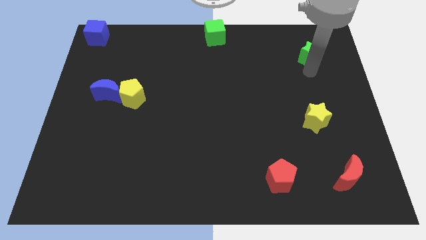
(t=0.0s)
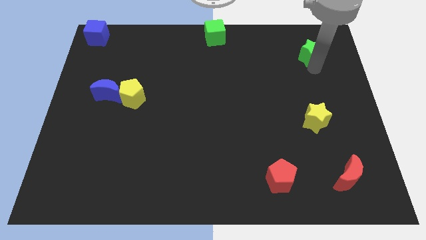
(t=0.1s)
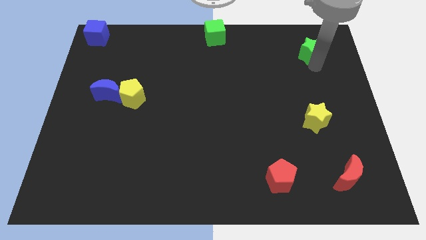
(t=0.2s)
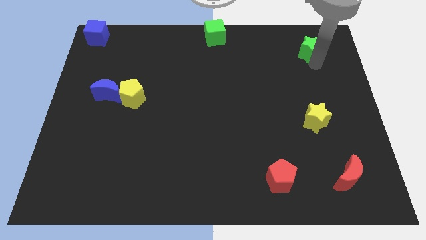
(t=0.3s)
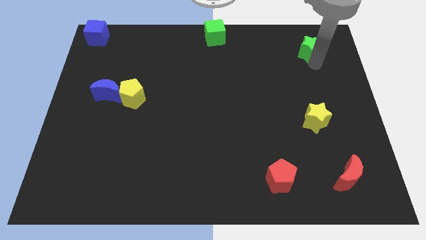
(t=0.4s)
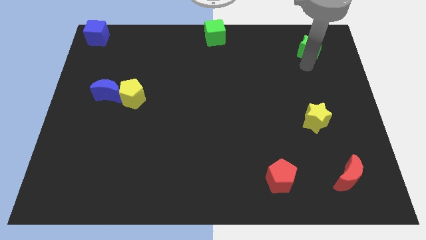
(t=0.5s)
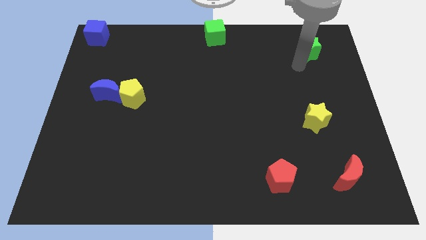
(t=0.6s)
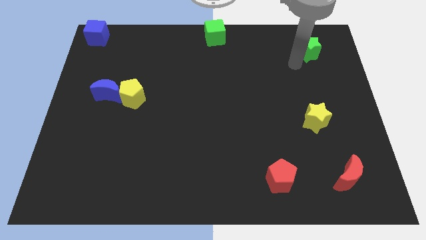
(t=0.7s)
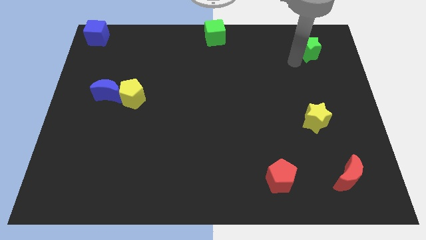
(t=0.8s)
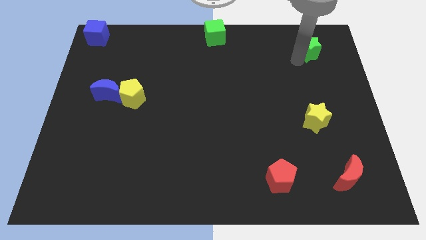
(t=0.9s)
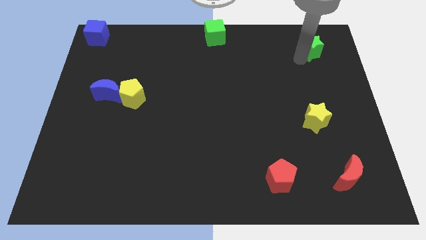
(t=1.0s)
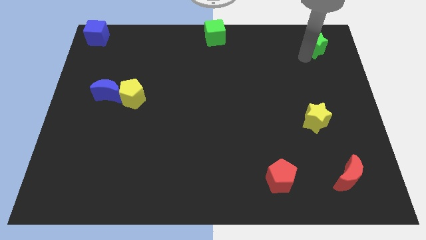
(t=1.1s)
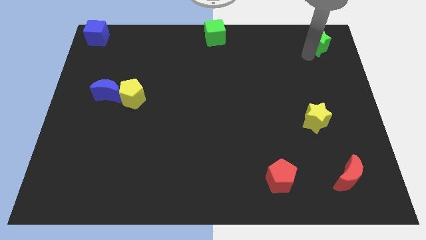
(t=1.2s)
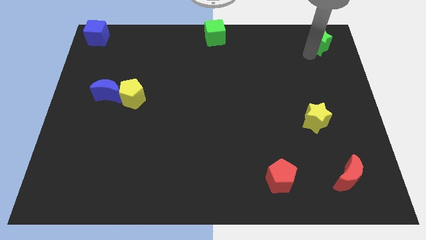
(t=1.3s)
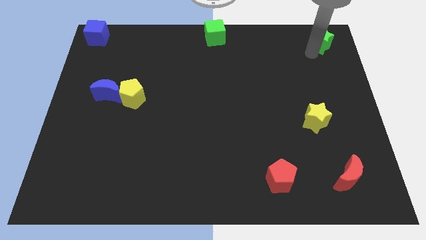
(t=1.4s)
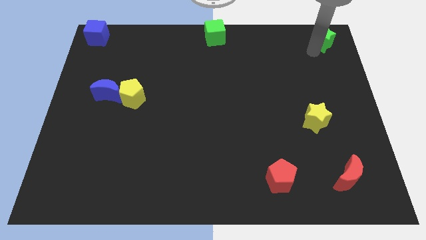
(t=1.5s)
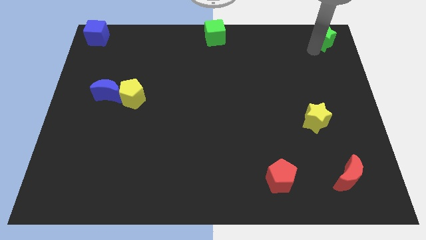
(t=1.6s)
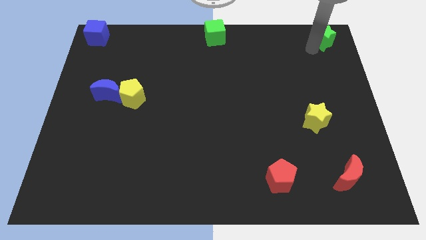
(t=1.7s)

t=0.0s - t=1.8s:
move the green star to the top right corner of the board

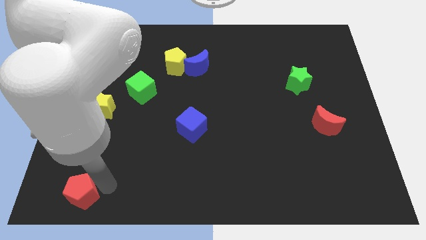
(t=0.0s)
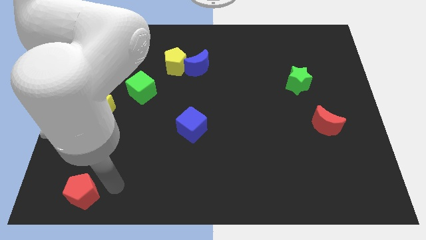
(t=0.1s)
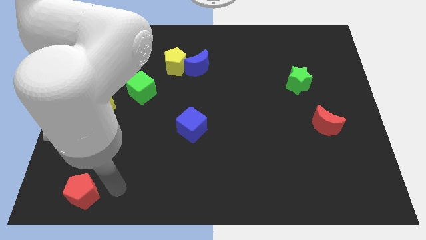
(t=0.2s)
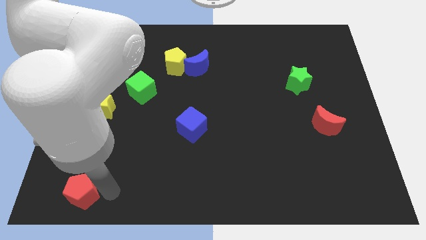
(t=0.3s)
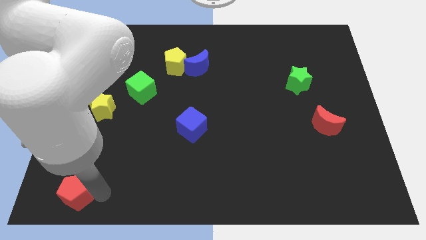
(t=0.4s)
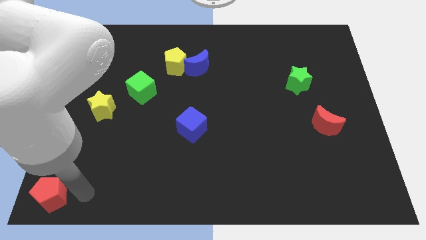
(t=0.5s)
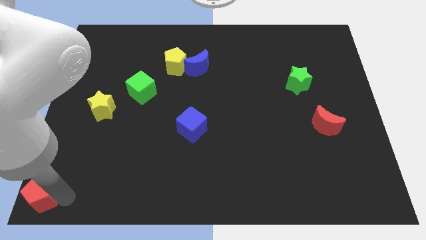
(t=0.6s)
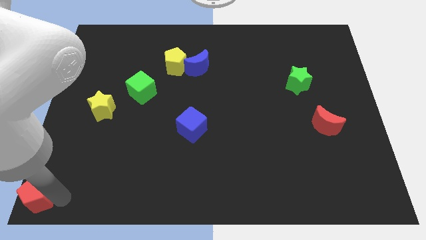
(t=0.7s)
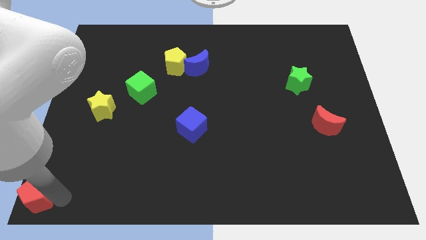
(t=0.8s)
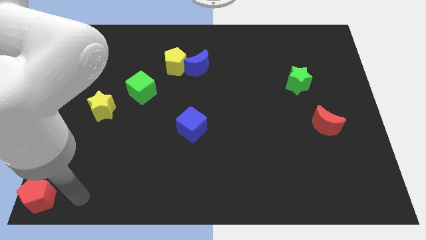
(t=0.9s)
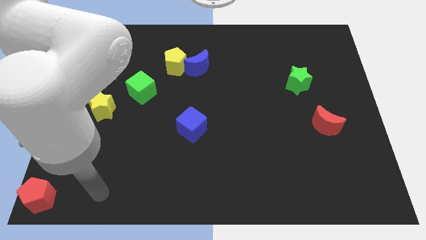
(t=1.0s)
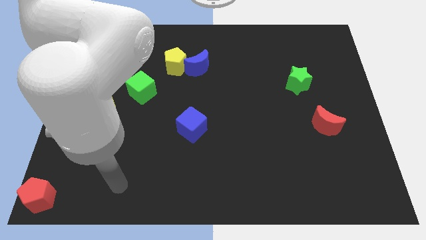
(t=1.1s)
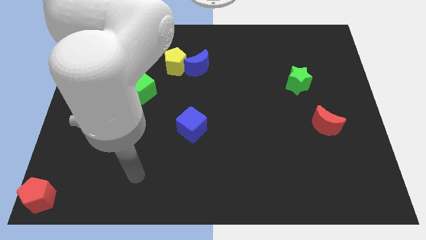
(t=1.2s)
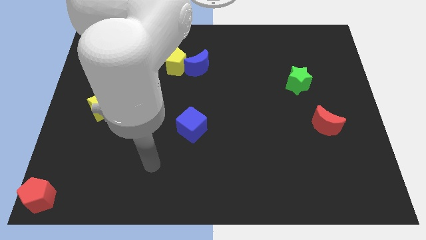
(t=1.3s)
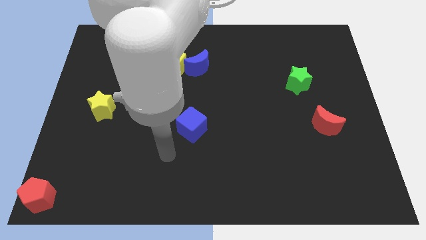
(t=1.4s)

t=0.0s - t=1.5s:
move the red pentagon diagonally bottom left to the yellow star

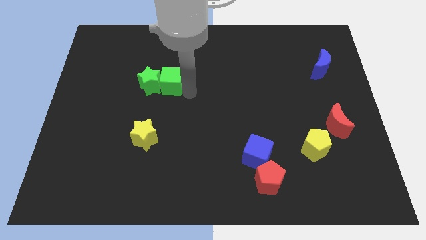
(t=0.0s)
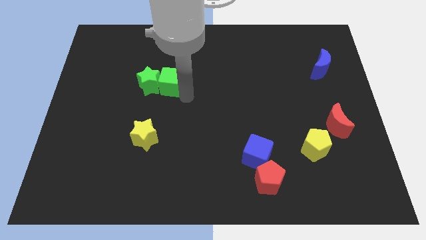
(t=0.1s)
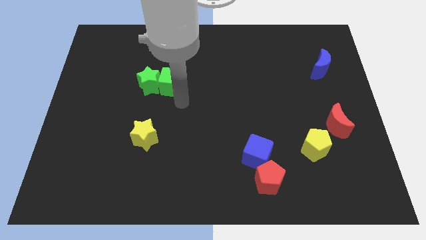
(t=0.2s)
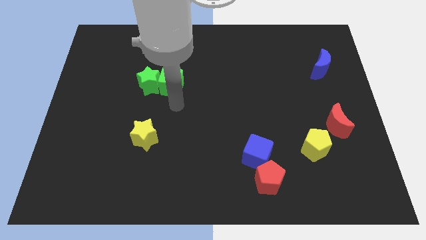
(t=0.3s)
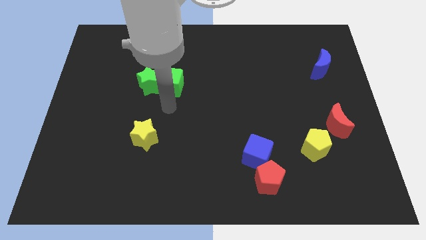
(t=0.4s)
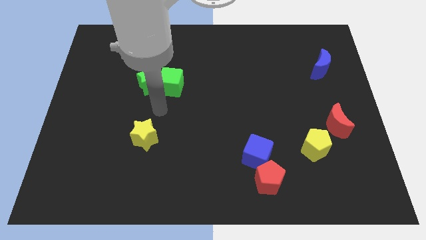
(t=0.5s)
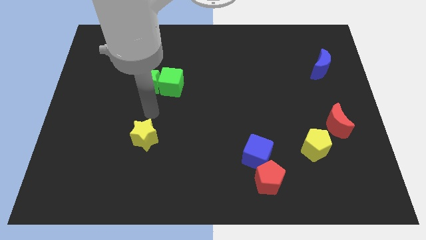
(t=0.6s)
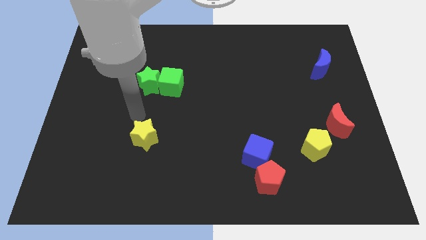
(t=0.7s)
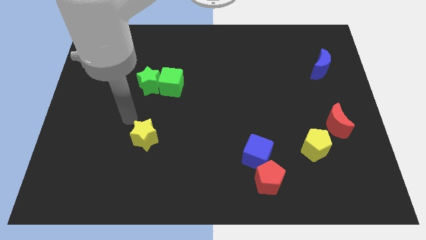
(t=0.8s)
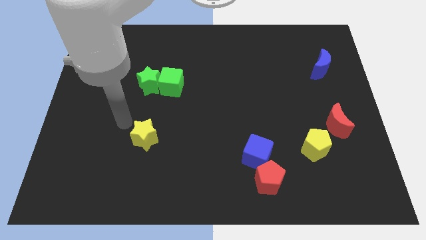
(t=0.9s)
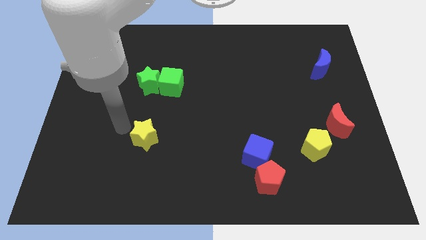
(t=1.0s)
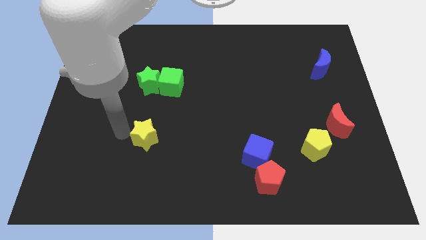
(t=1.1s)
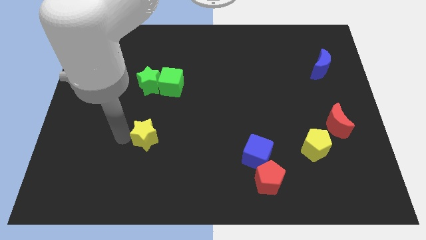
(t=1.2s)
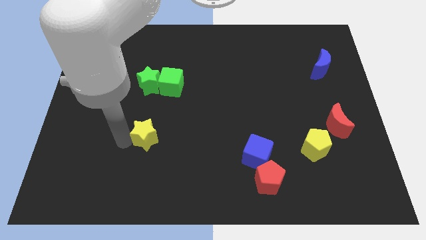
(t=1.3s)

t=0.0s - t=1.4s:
move your hand towards the yellow star

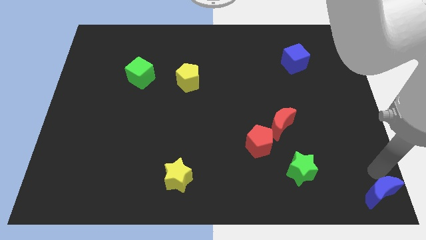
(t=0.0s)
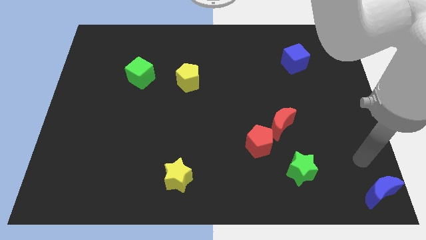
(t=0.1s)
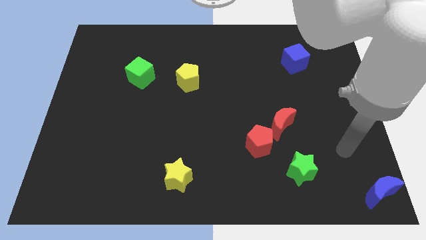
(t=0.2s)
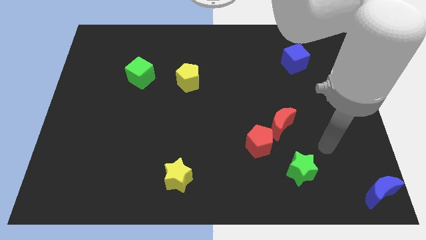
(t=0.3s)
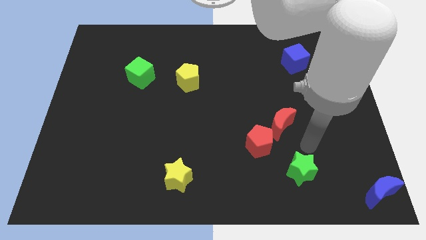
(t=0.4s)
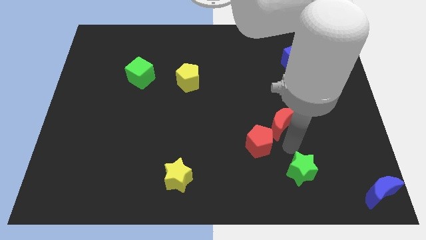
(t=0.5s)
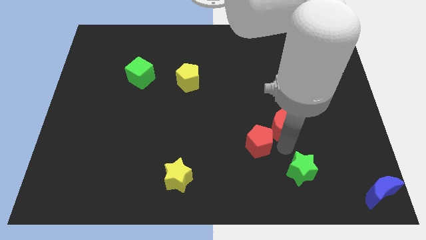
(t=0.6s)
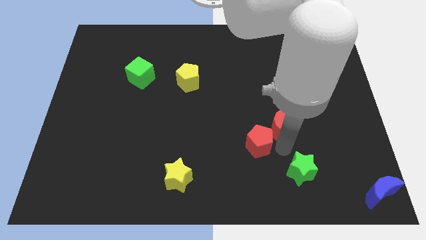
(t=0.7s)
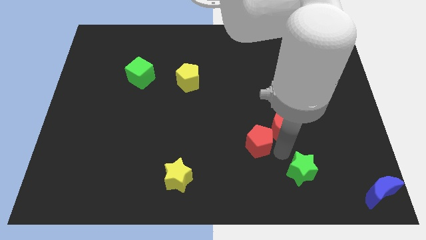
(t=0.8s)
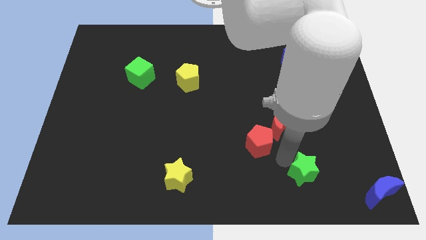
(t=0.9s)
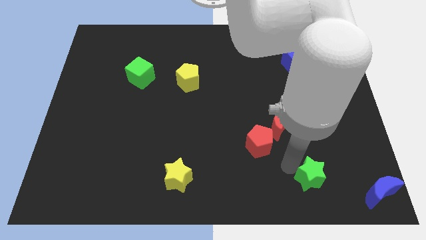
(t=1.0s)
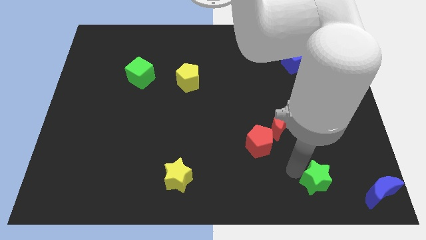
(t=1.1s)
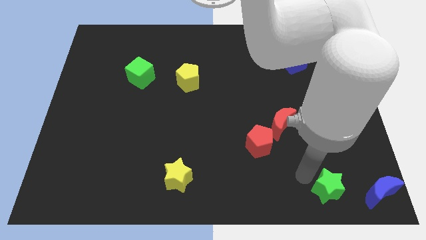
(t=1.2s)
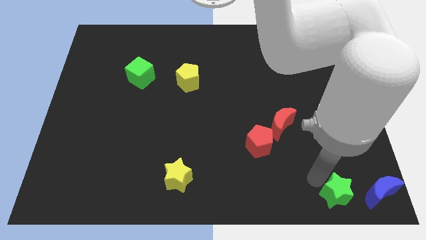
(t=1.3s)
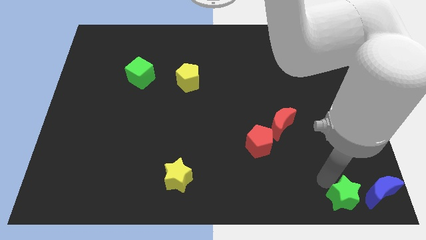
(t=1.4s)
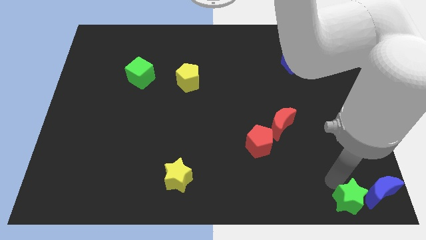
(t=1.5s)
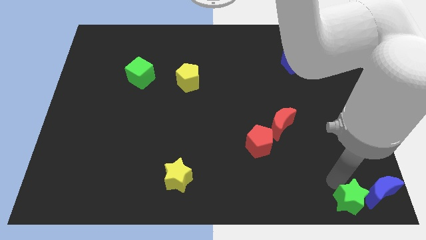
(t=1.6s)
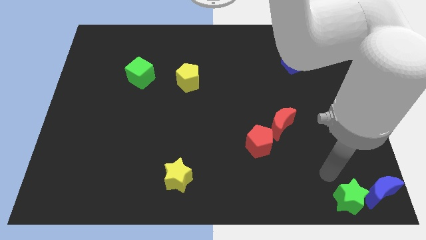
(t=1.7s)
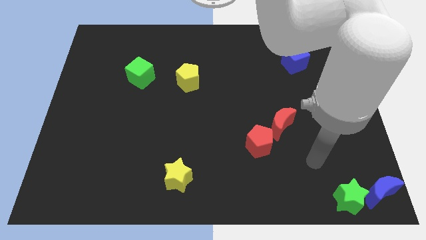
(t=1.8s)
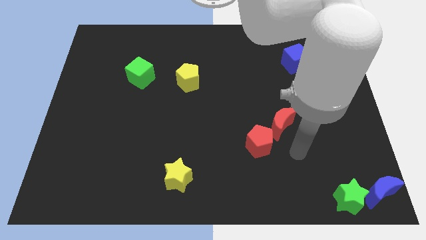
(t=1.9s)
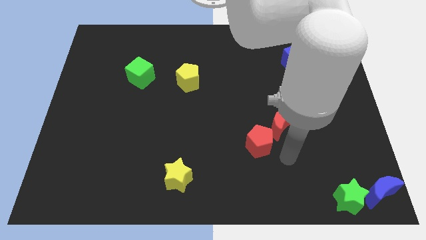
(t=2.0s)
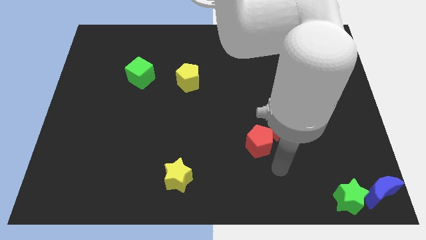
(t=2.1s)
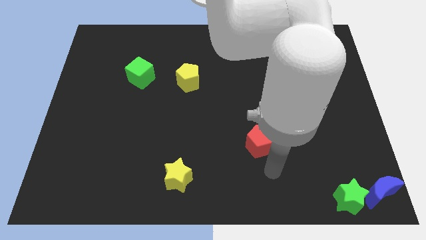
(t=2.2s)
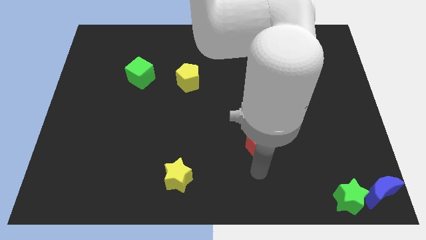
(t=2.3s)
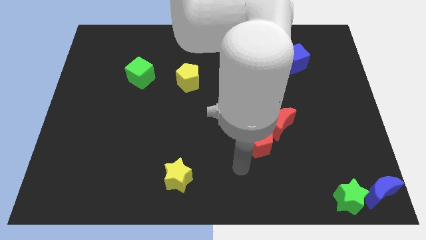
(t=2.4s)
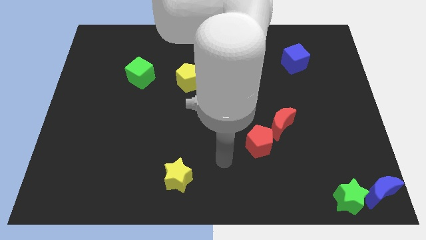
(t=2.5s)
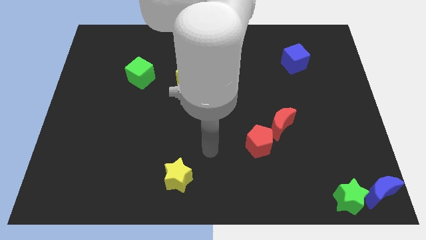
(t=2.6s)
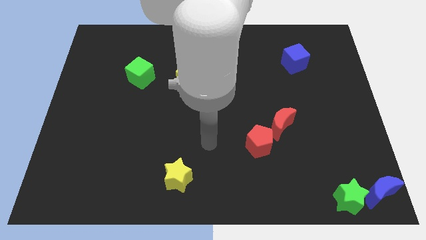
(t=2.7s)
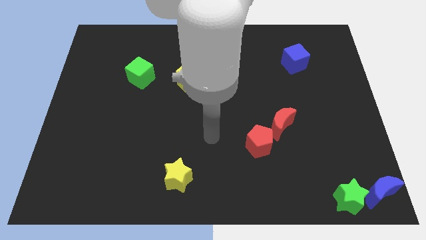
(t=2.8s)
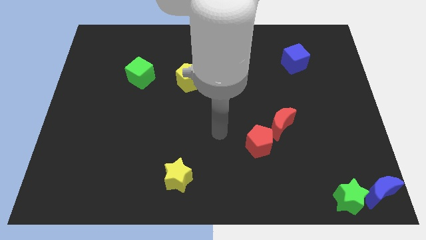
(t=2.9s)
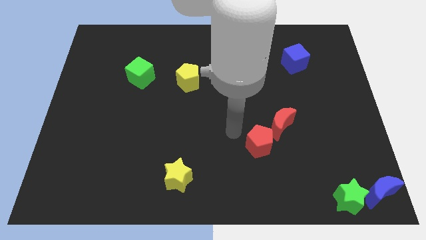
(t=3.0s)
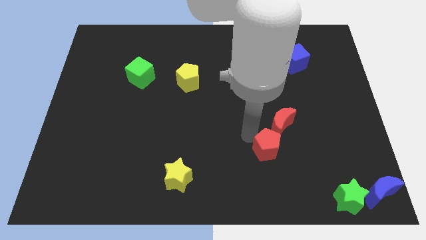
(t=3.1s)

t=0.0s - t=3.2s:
slide the green star to the left side of the blue crescent

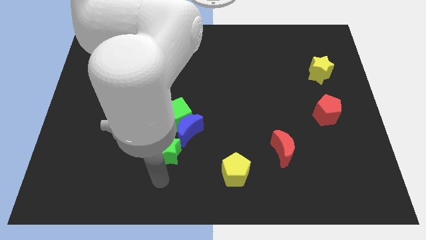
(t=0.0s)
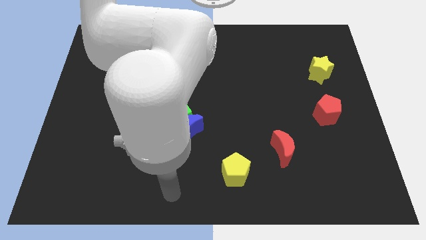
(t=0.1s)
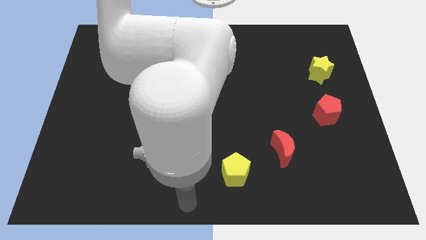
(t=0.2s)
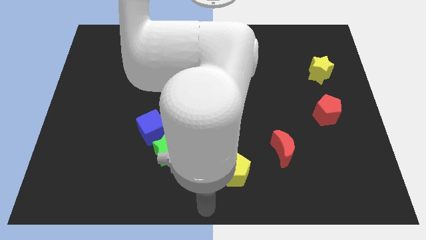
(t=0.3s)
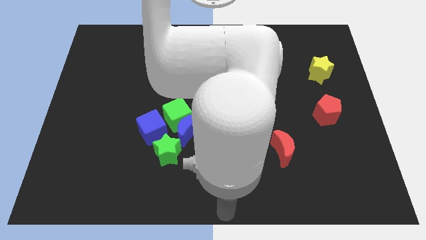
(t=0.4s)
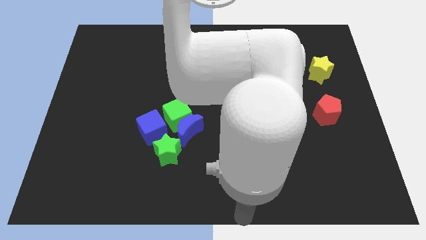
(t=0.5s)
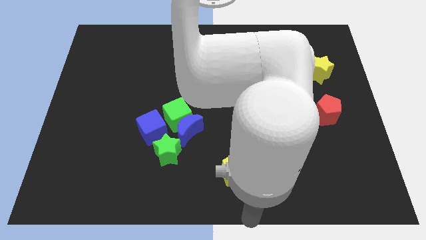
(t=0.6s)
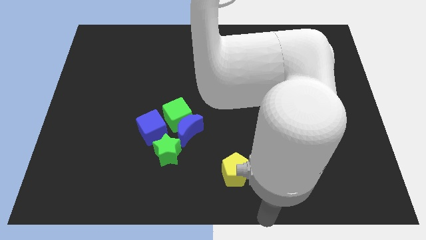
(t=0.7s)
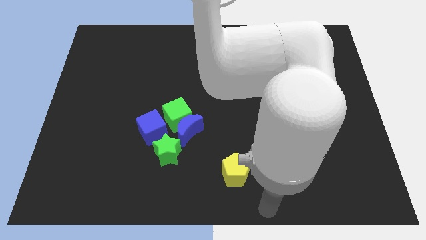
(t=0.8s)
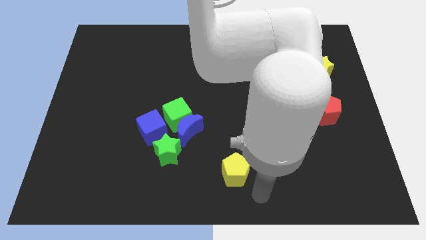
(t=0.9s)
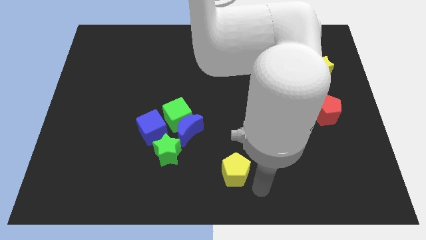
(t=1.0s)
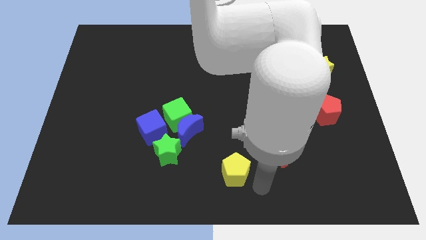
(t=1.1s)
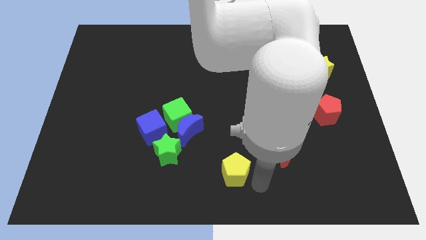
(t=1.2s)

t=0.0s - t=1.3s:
move your arm towards the yellow pentagon
